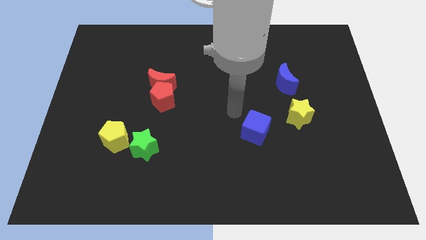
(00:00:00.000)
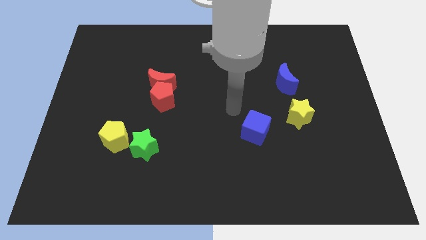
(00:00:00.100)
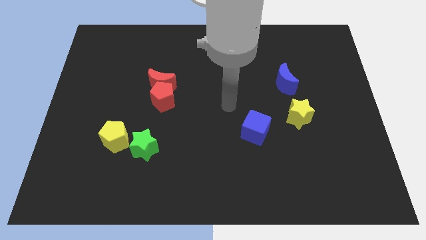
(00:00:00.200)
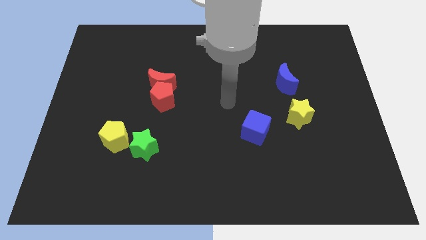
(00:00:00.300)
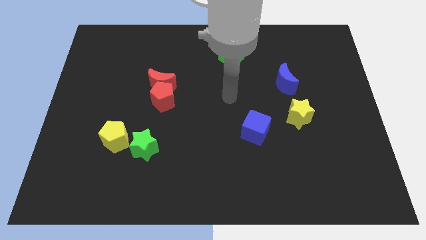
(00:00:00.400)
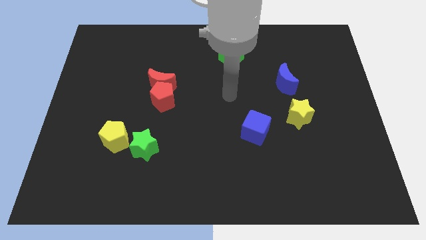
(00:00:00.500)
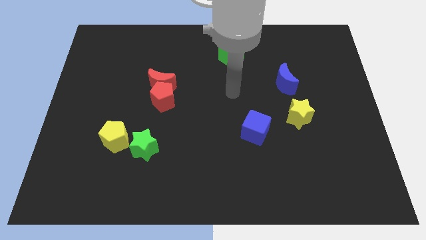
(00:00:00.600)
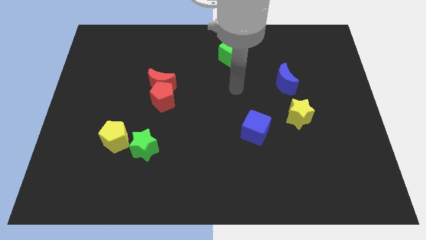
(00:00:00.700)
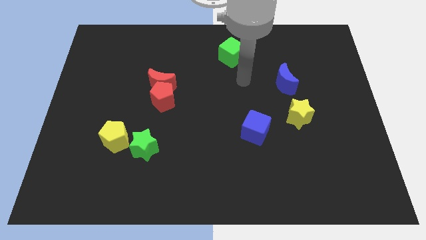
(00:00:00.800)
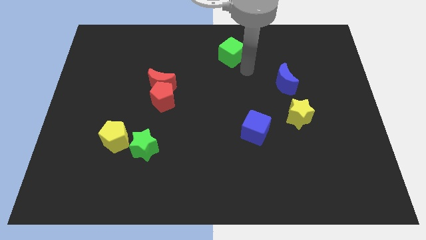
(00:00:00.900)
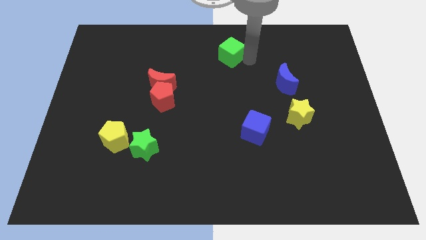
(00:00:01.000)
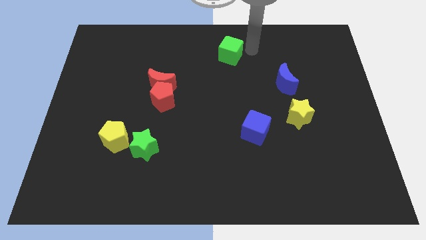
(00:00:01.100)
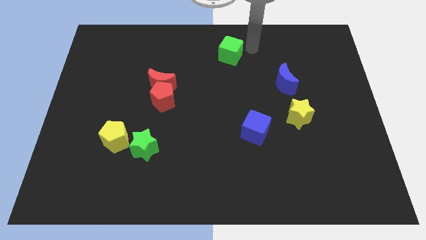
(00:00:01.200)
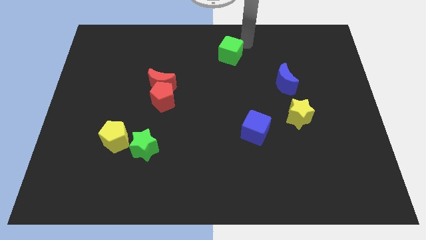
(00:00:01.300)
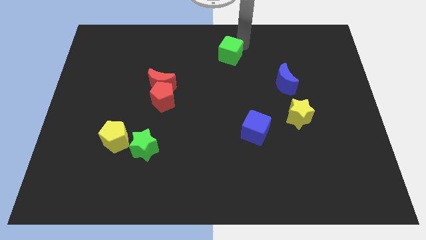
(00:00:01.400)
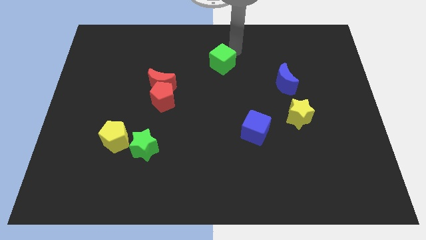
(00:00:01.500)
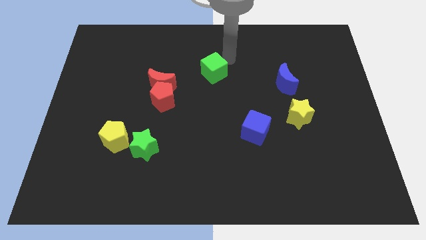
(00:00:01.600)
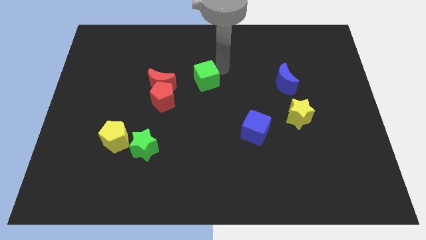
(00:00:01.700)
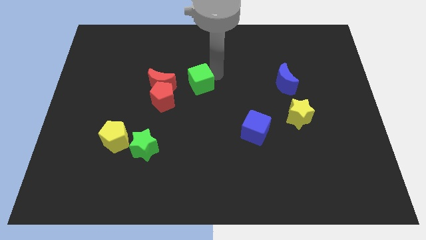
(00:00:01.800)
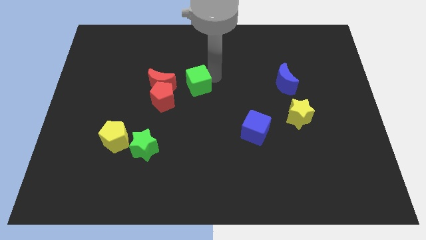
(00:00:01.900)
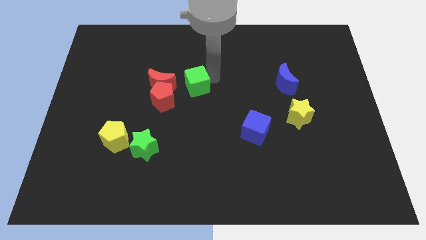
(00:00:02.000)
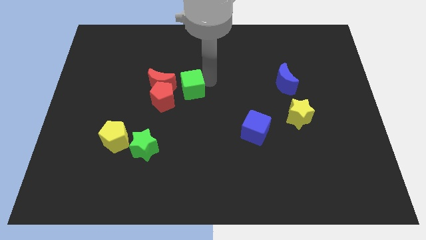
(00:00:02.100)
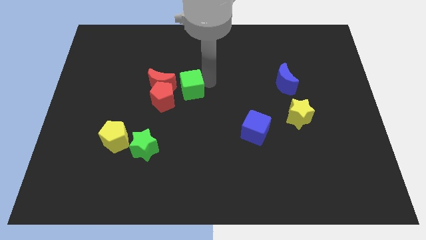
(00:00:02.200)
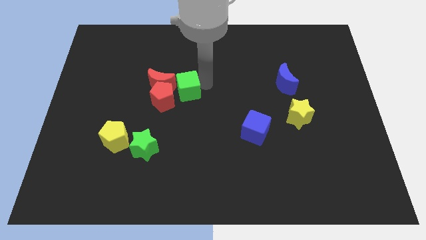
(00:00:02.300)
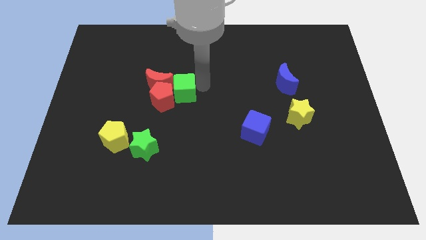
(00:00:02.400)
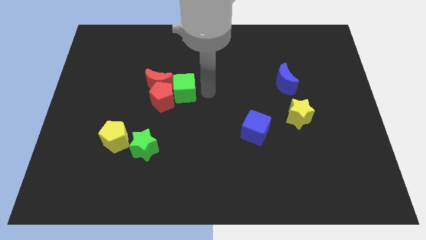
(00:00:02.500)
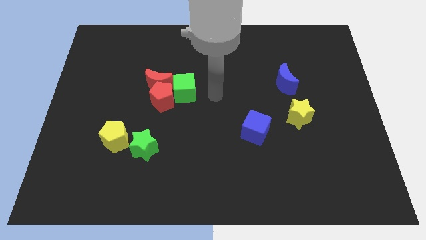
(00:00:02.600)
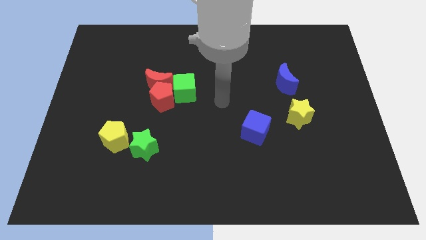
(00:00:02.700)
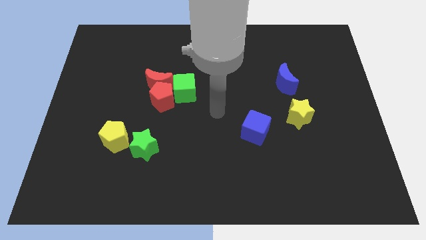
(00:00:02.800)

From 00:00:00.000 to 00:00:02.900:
move the green cube into the red blocks

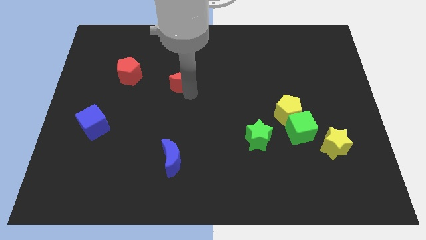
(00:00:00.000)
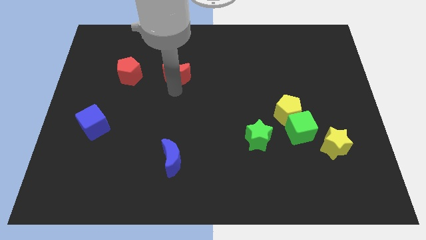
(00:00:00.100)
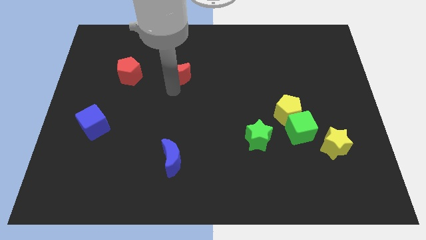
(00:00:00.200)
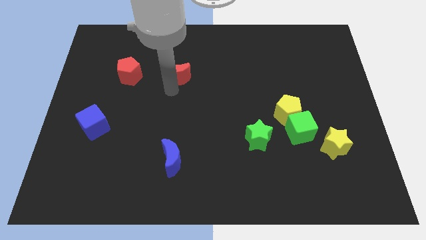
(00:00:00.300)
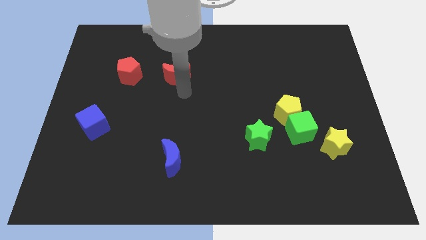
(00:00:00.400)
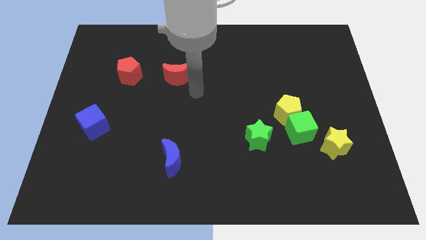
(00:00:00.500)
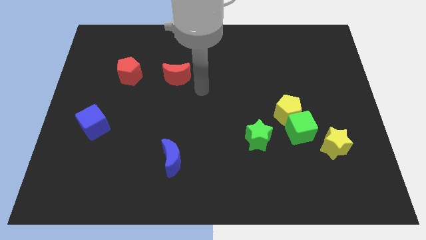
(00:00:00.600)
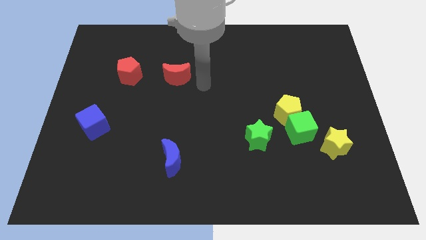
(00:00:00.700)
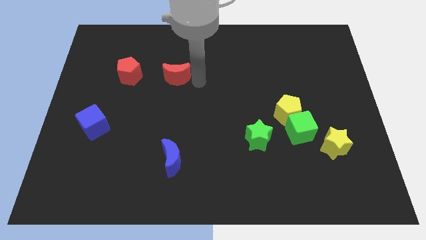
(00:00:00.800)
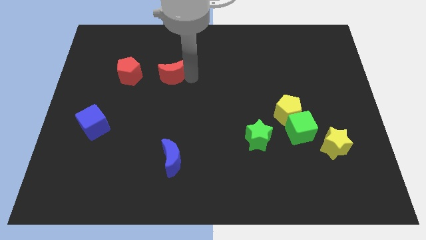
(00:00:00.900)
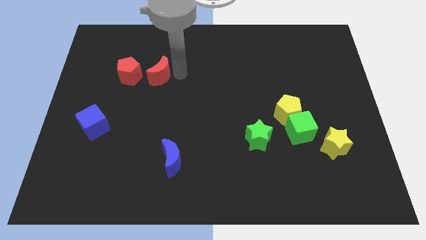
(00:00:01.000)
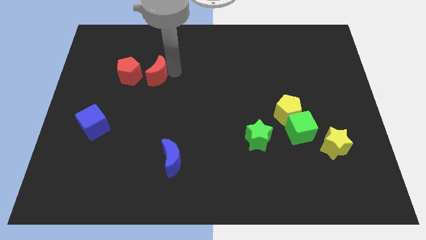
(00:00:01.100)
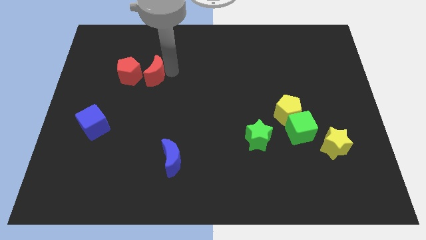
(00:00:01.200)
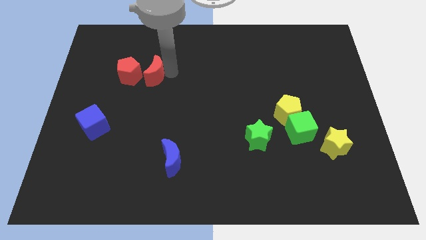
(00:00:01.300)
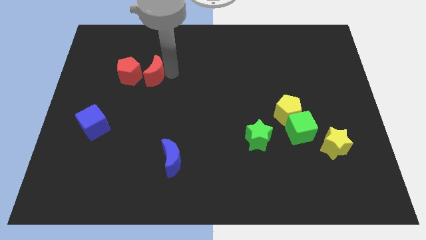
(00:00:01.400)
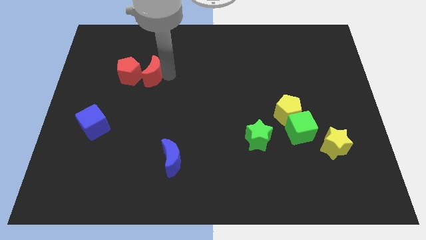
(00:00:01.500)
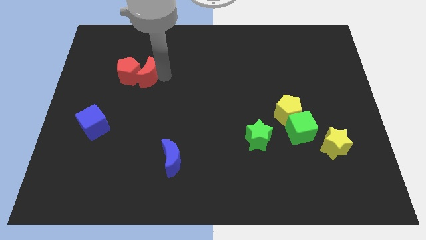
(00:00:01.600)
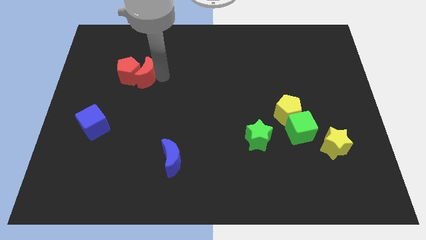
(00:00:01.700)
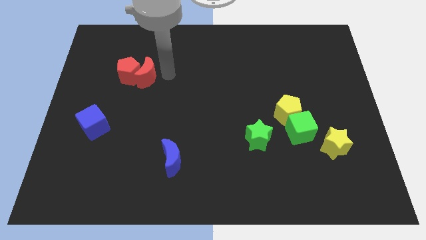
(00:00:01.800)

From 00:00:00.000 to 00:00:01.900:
move the red moon into the red pentagon

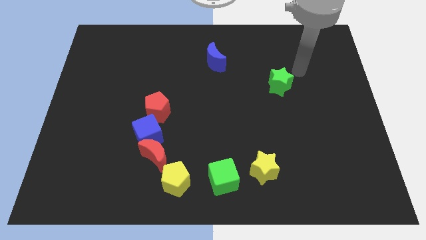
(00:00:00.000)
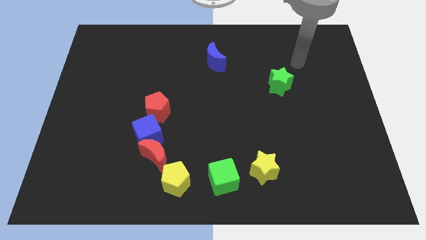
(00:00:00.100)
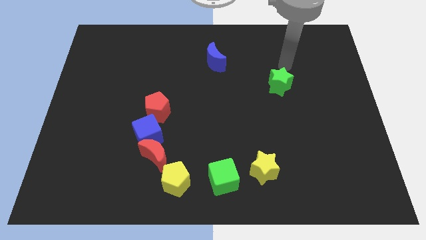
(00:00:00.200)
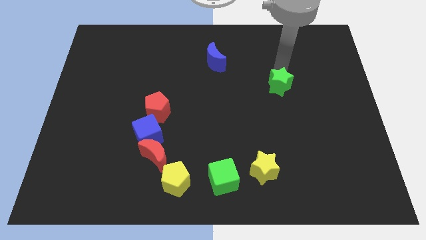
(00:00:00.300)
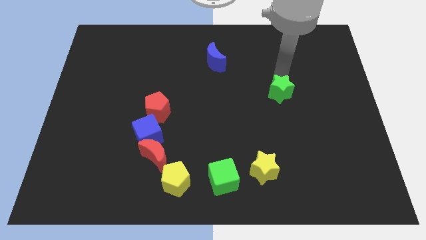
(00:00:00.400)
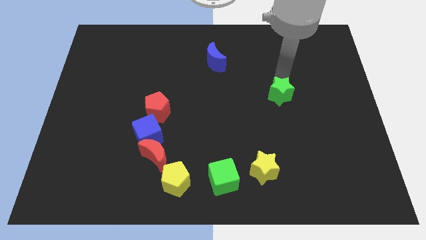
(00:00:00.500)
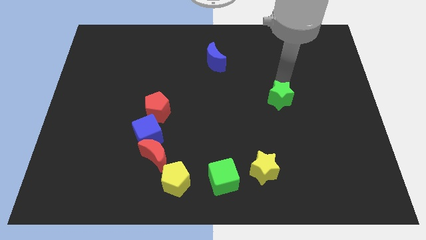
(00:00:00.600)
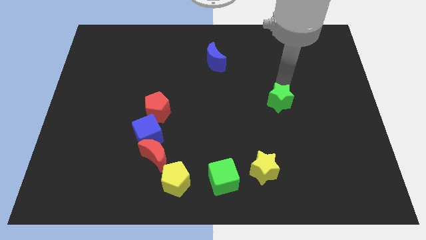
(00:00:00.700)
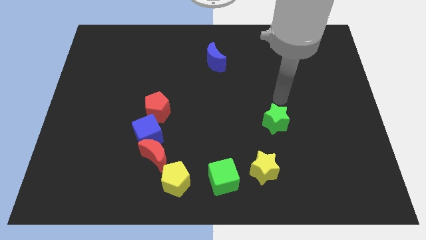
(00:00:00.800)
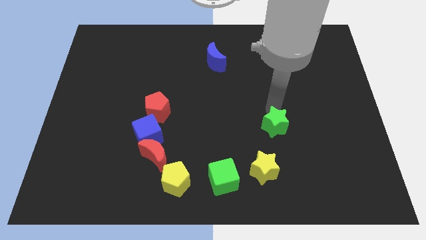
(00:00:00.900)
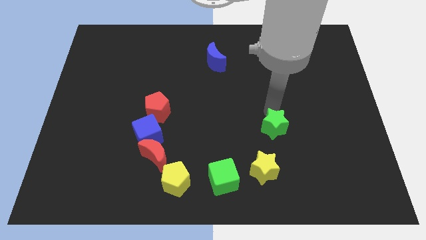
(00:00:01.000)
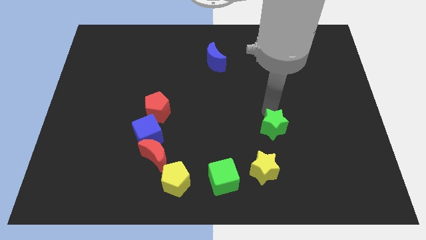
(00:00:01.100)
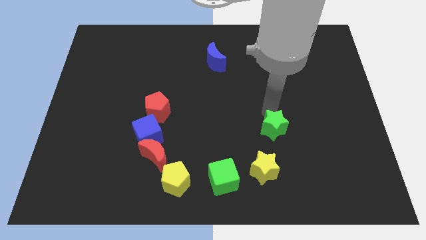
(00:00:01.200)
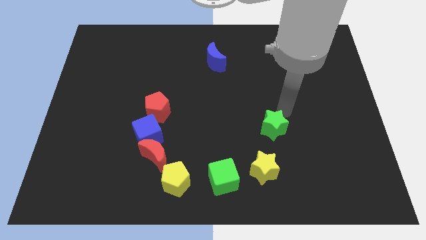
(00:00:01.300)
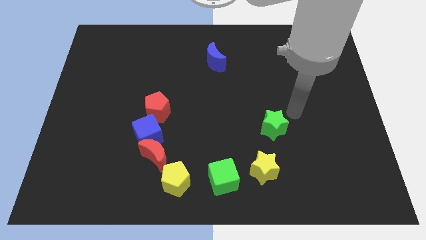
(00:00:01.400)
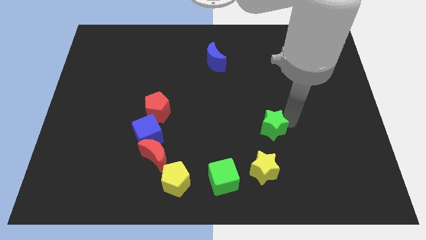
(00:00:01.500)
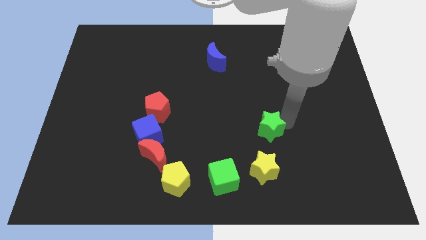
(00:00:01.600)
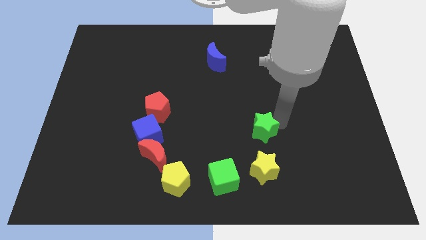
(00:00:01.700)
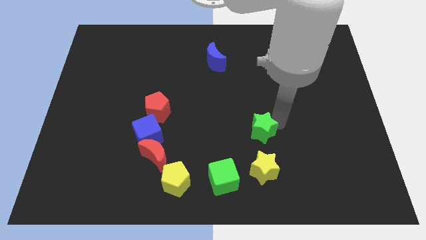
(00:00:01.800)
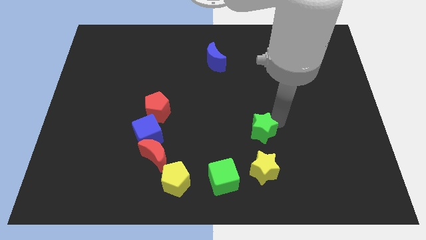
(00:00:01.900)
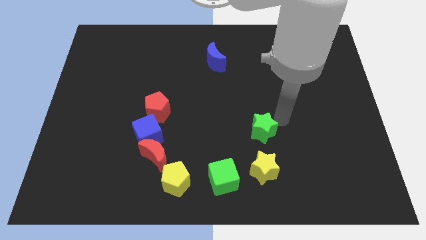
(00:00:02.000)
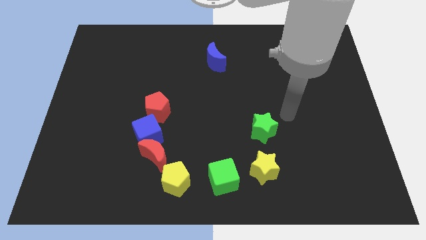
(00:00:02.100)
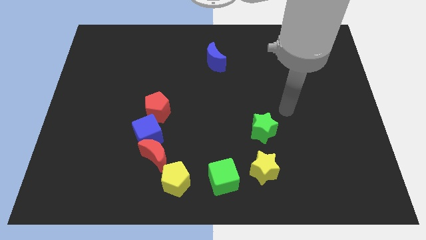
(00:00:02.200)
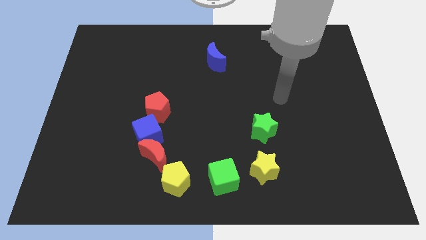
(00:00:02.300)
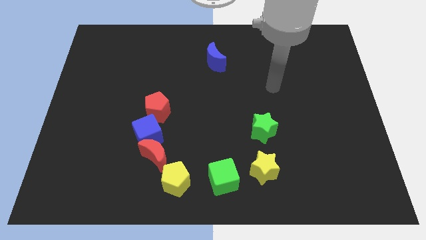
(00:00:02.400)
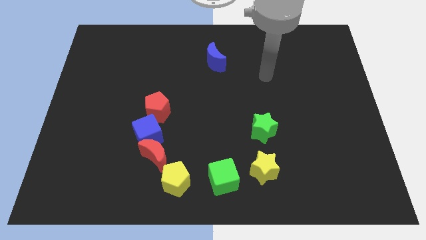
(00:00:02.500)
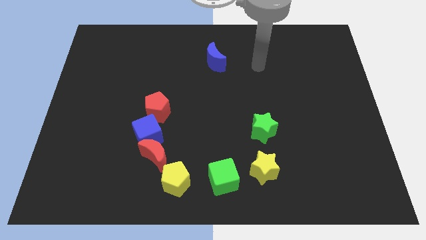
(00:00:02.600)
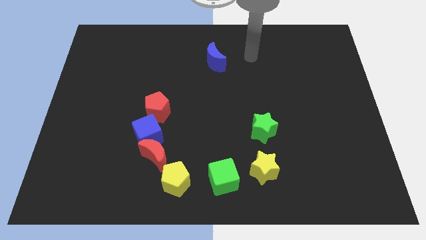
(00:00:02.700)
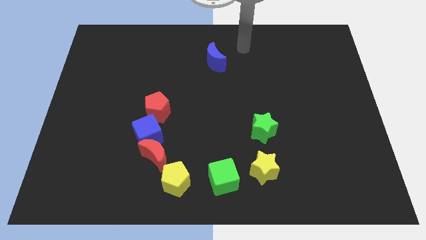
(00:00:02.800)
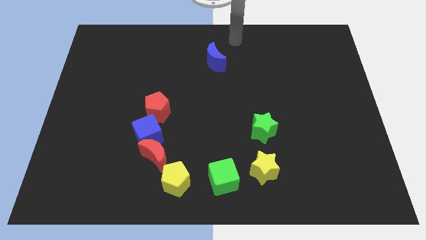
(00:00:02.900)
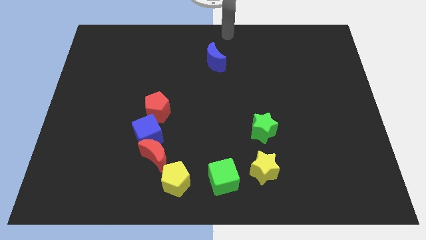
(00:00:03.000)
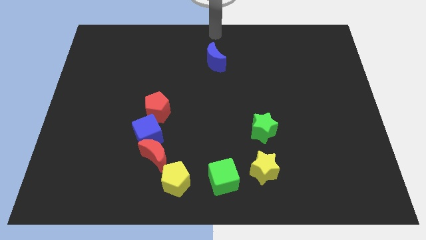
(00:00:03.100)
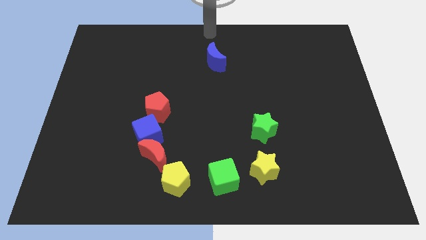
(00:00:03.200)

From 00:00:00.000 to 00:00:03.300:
place the green star above the yellow star

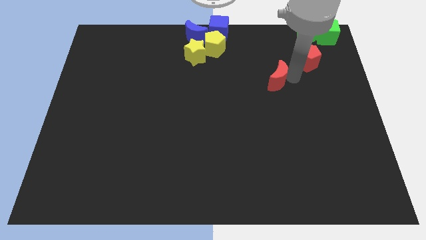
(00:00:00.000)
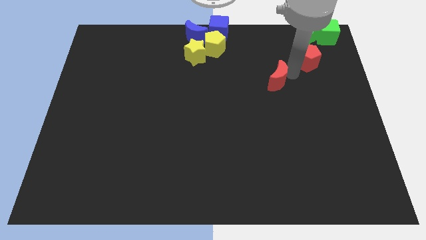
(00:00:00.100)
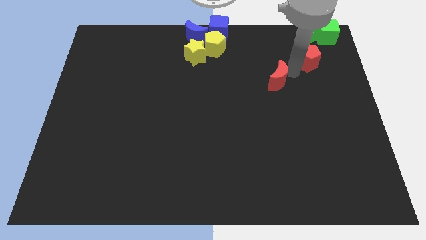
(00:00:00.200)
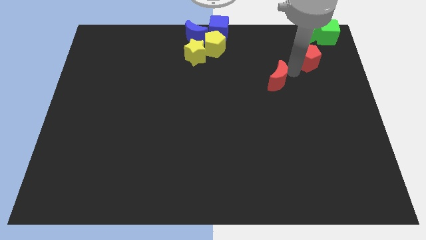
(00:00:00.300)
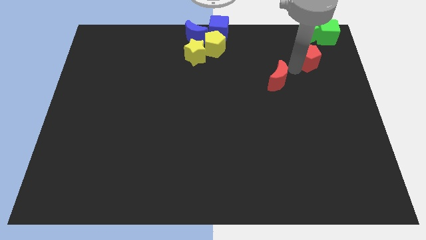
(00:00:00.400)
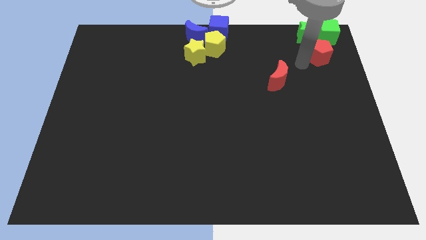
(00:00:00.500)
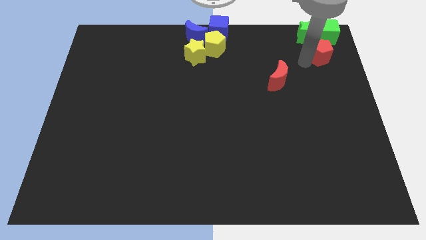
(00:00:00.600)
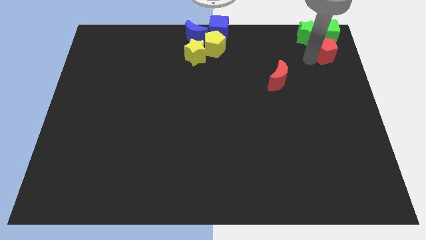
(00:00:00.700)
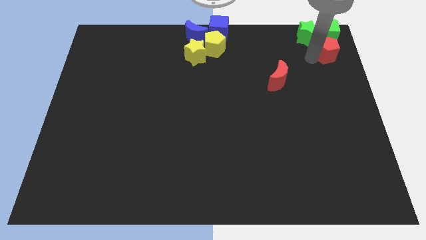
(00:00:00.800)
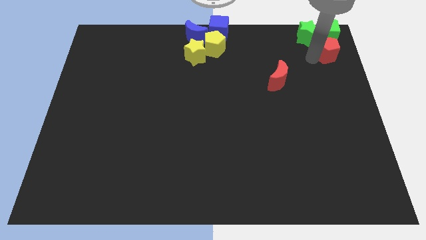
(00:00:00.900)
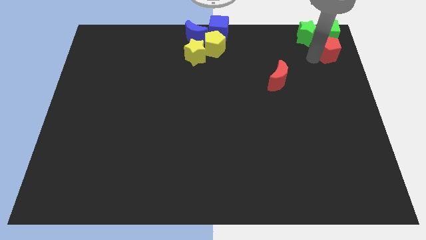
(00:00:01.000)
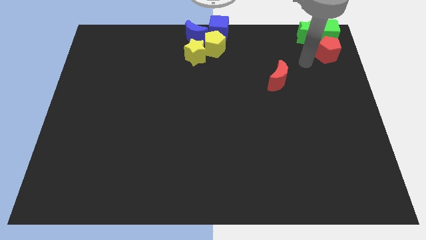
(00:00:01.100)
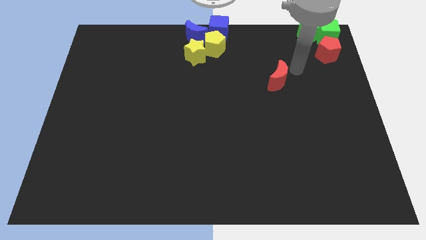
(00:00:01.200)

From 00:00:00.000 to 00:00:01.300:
place red pentagon below green cube
